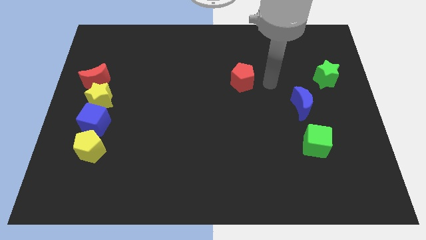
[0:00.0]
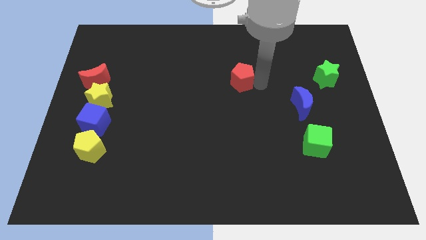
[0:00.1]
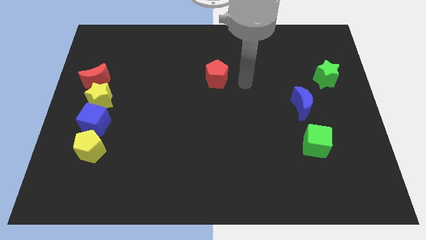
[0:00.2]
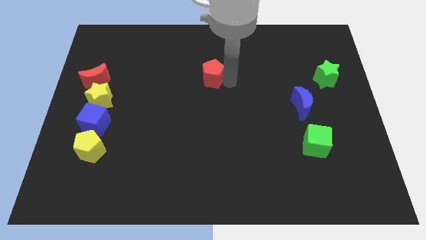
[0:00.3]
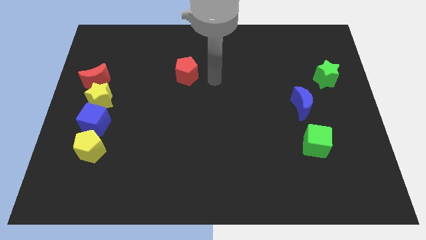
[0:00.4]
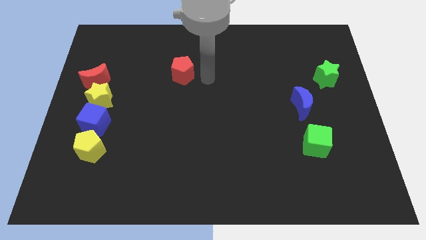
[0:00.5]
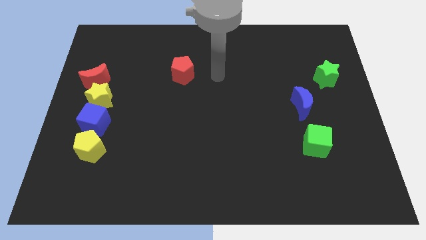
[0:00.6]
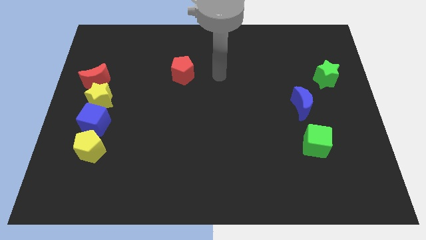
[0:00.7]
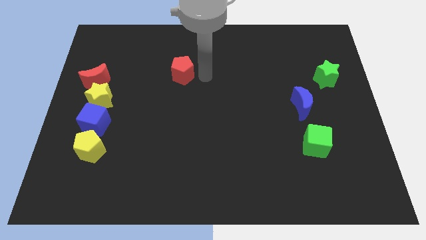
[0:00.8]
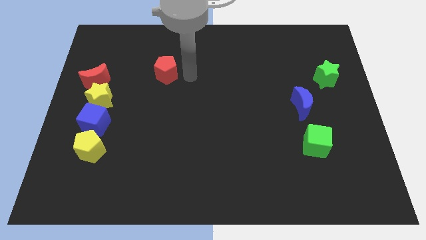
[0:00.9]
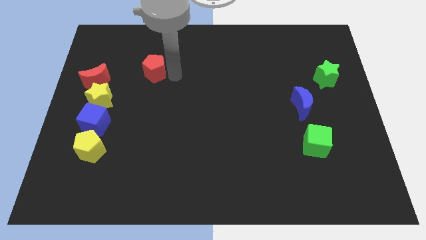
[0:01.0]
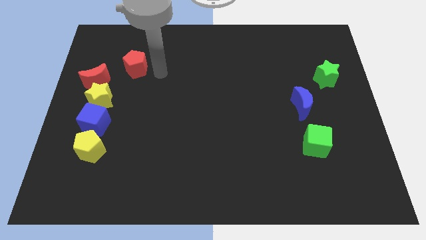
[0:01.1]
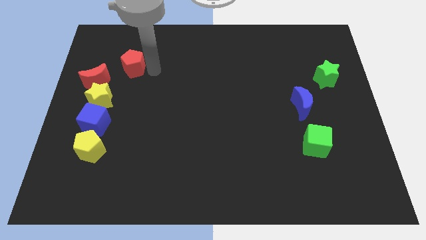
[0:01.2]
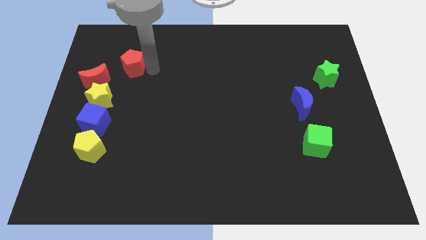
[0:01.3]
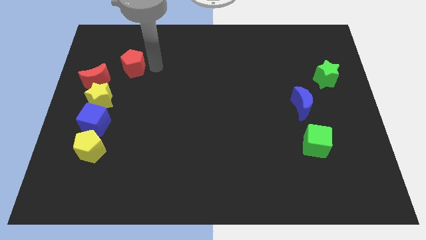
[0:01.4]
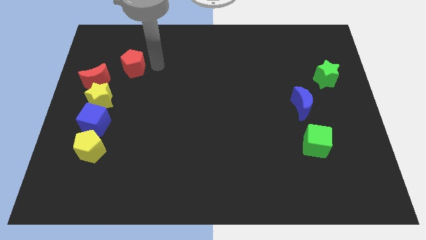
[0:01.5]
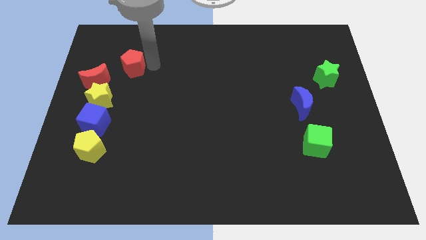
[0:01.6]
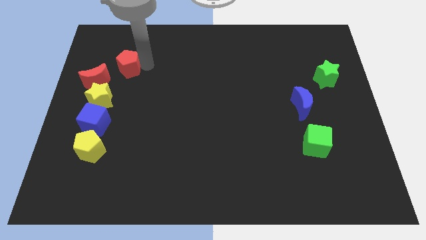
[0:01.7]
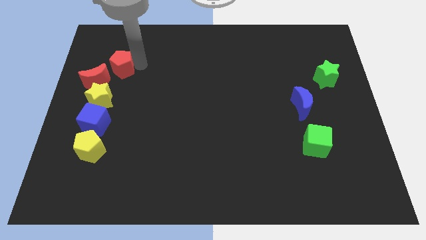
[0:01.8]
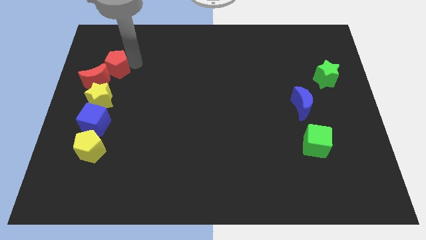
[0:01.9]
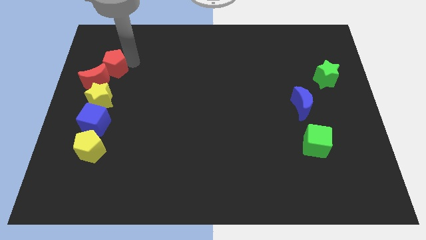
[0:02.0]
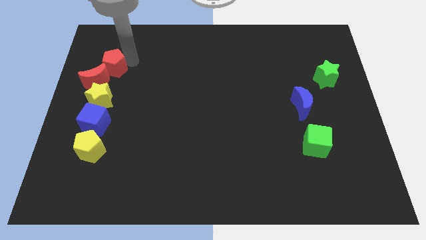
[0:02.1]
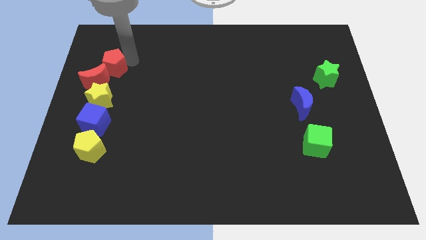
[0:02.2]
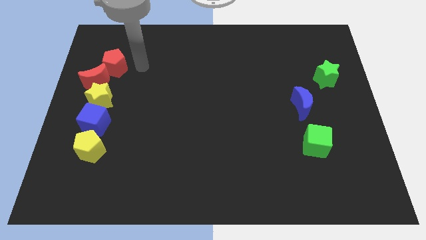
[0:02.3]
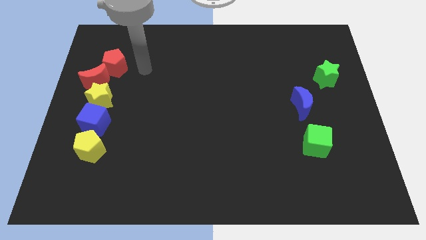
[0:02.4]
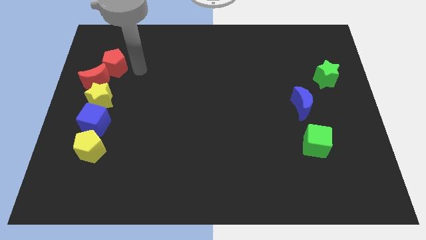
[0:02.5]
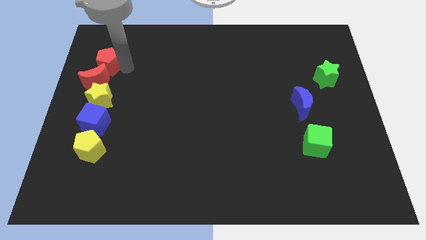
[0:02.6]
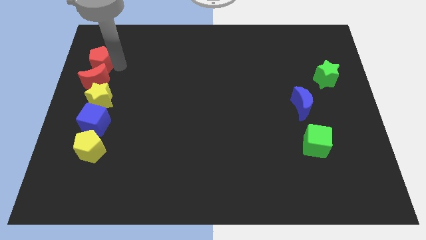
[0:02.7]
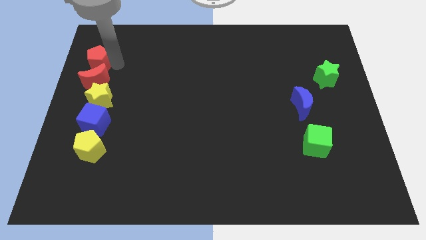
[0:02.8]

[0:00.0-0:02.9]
push the red pentagon above the red moon

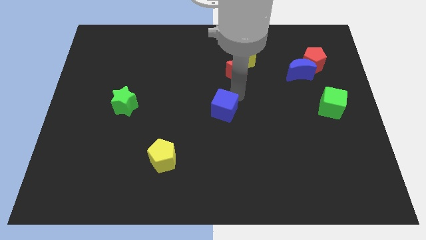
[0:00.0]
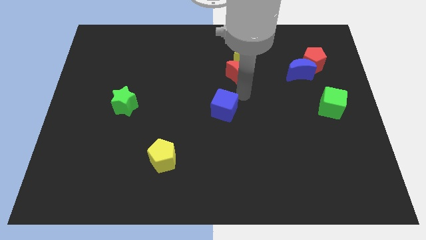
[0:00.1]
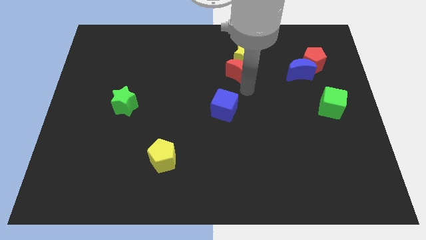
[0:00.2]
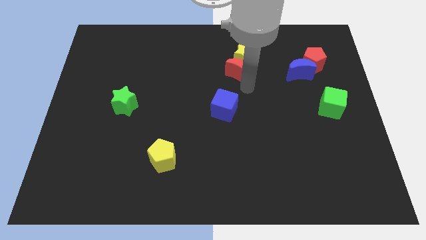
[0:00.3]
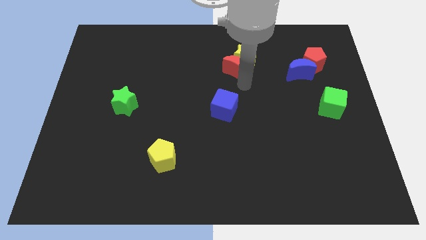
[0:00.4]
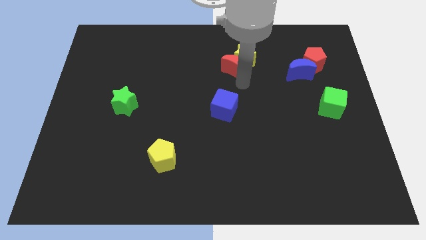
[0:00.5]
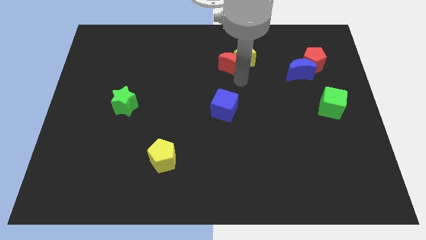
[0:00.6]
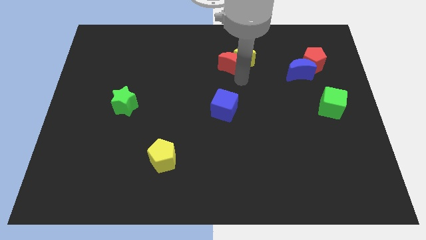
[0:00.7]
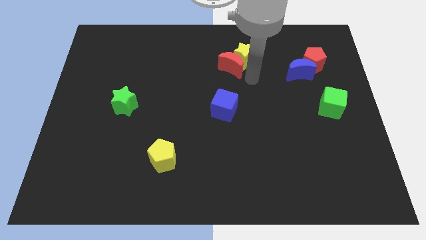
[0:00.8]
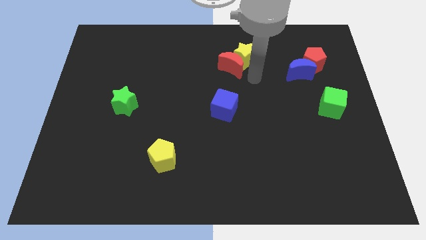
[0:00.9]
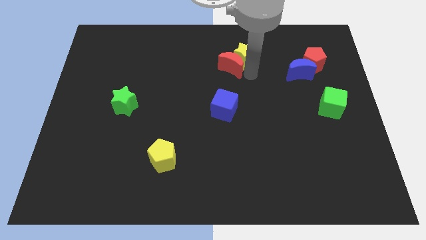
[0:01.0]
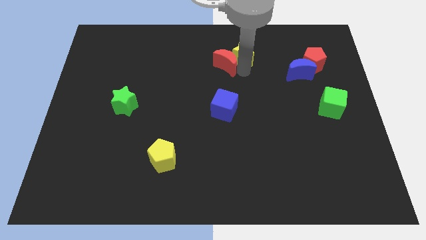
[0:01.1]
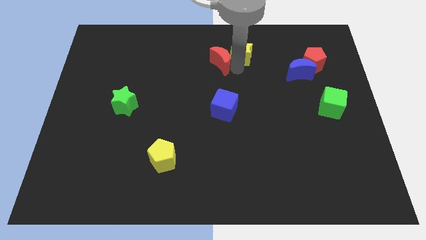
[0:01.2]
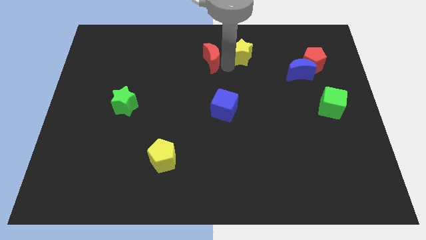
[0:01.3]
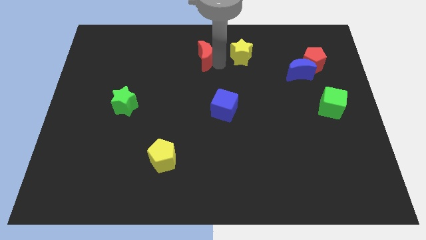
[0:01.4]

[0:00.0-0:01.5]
drag the red crescent to the left side of the yellow star

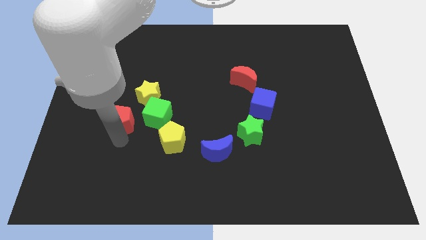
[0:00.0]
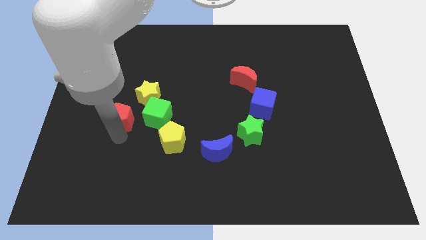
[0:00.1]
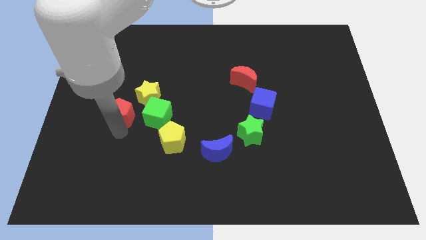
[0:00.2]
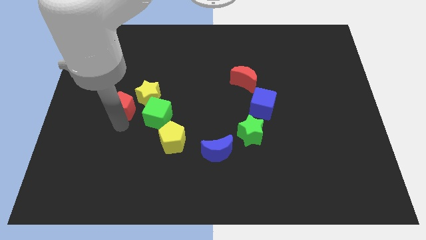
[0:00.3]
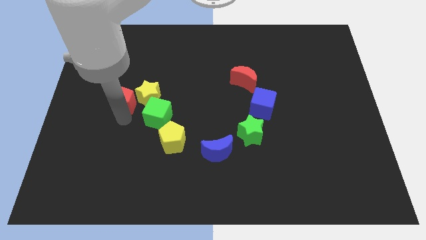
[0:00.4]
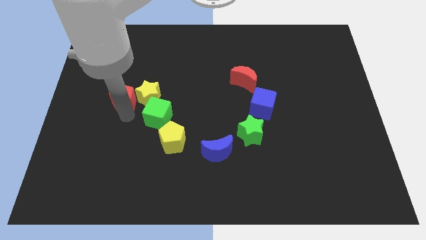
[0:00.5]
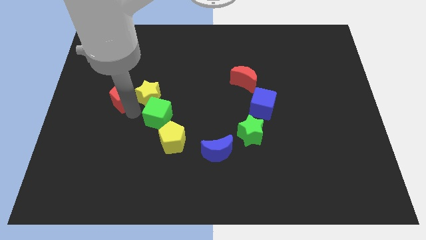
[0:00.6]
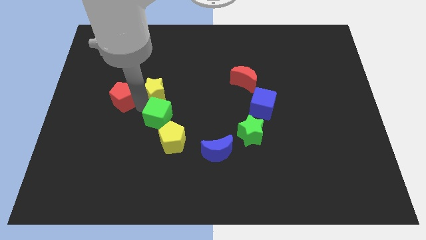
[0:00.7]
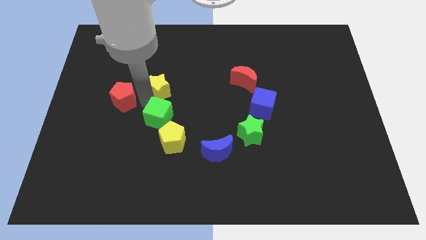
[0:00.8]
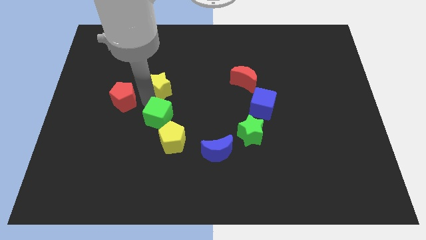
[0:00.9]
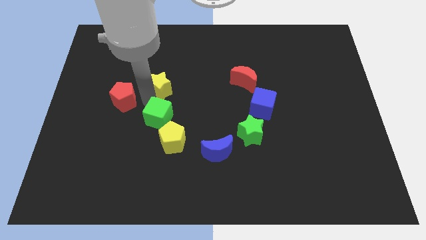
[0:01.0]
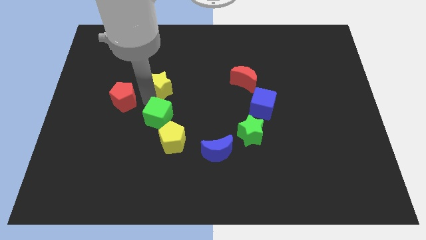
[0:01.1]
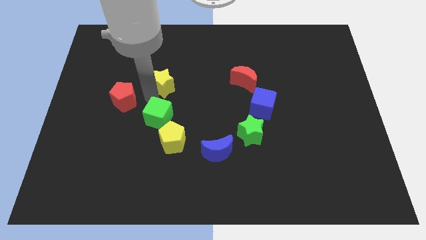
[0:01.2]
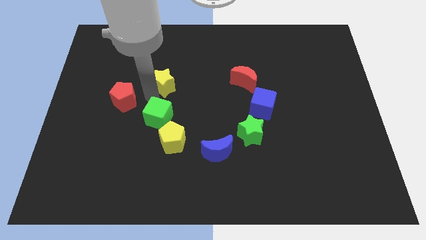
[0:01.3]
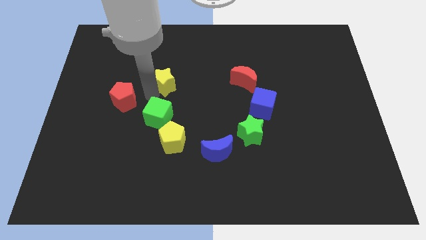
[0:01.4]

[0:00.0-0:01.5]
slightly push the yellow star away from green cube

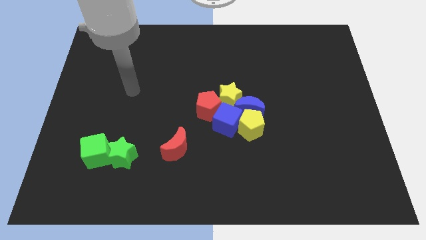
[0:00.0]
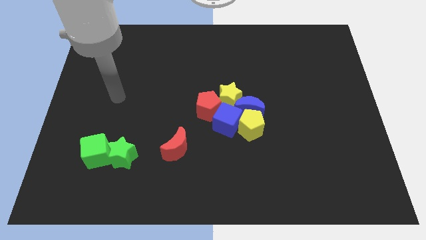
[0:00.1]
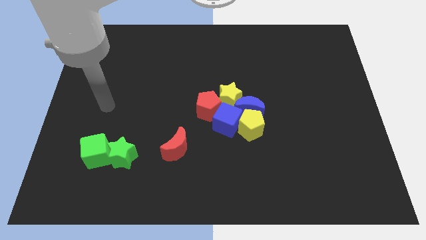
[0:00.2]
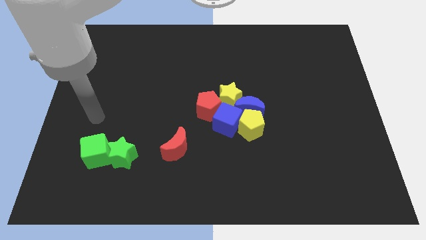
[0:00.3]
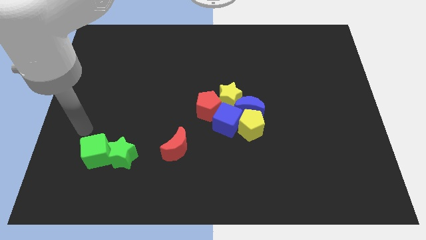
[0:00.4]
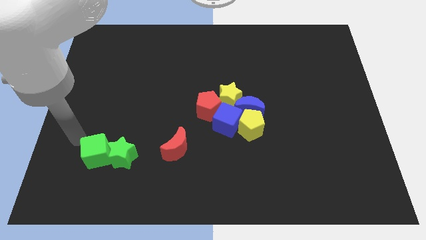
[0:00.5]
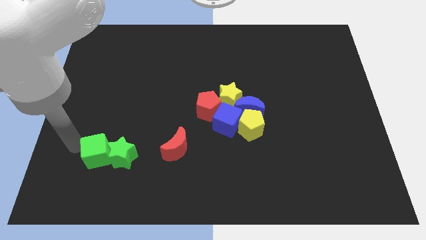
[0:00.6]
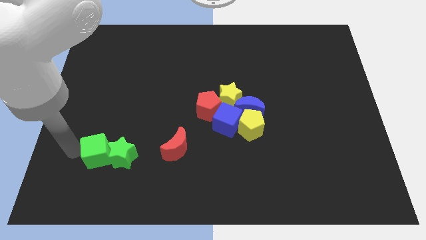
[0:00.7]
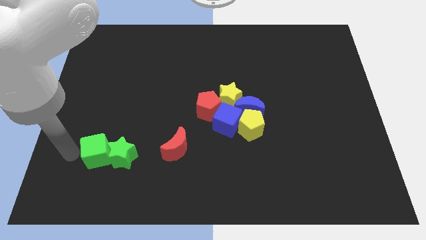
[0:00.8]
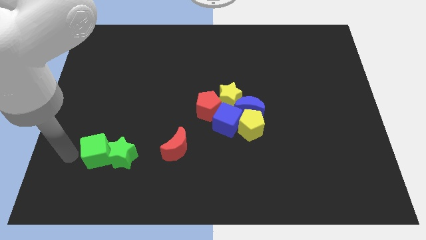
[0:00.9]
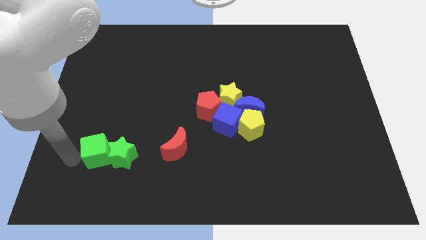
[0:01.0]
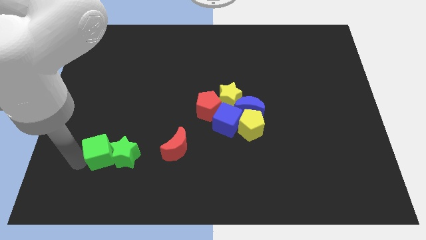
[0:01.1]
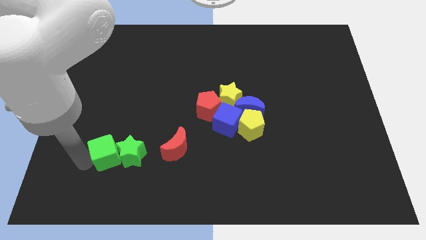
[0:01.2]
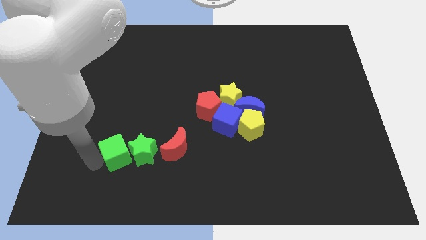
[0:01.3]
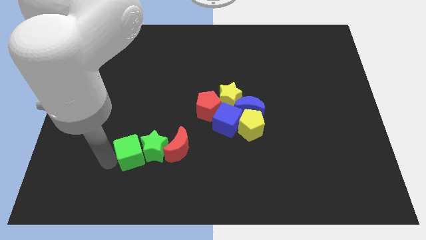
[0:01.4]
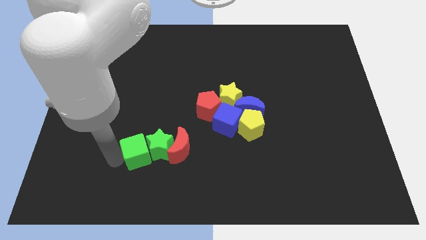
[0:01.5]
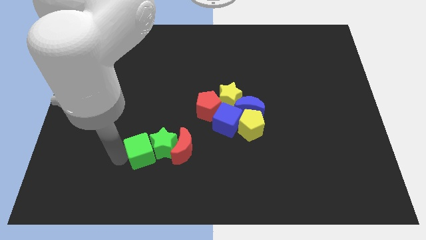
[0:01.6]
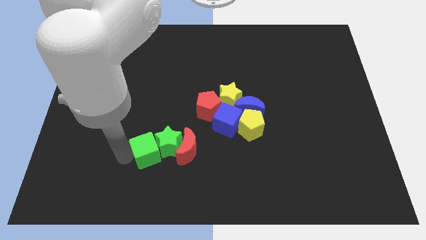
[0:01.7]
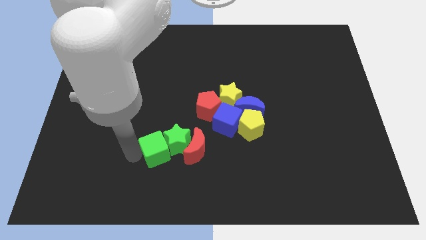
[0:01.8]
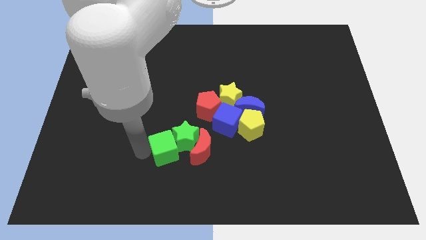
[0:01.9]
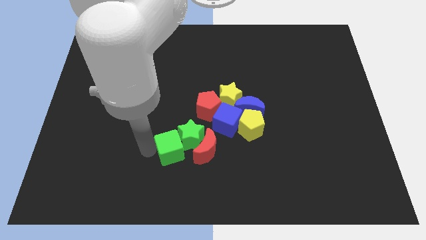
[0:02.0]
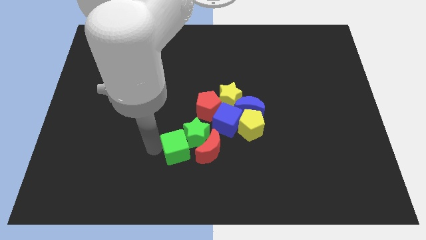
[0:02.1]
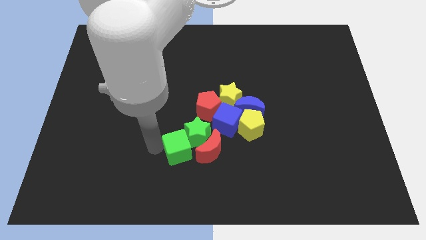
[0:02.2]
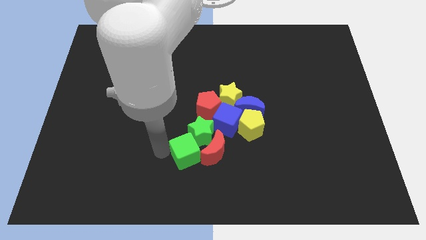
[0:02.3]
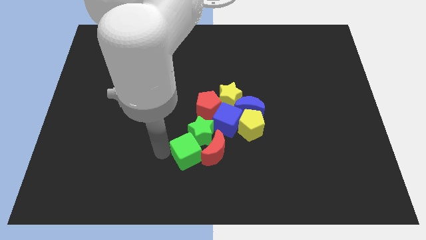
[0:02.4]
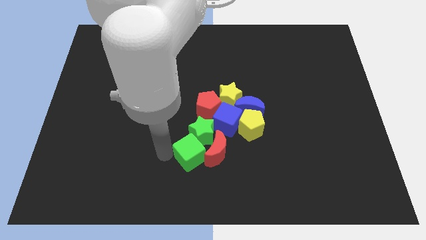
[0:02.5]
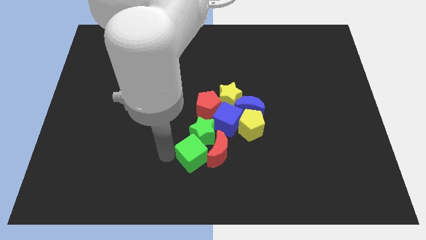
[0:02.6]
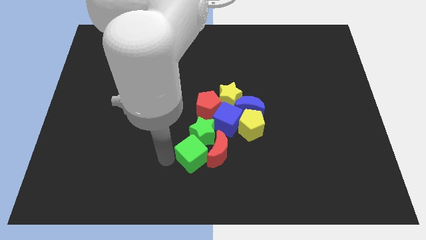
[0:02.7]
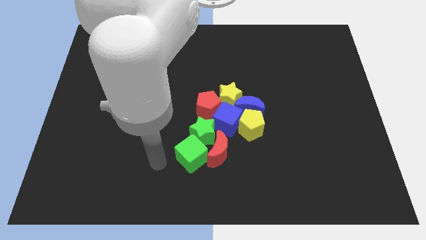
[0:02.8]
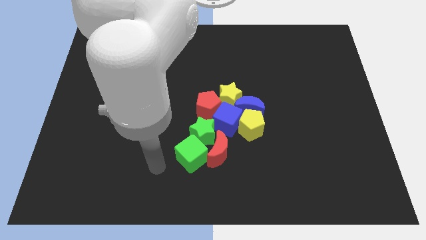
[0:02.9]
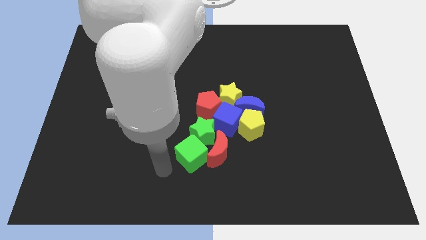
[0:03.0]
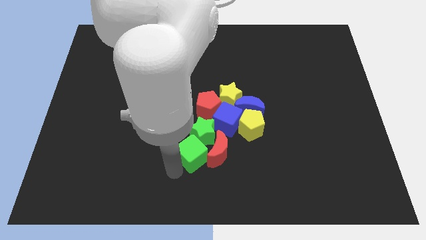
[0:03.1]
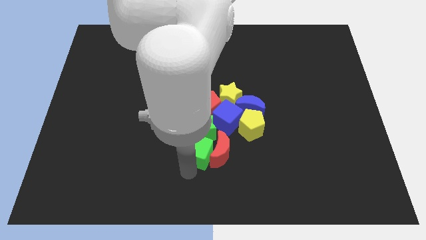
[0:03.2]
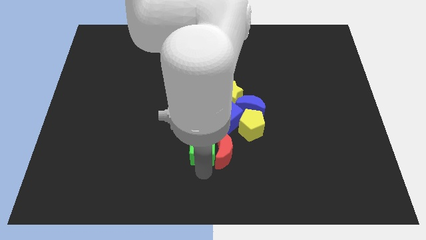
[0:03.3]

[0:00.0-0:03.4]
move the green cube along with green star to the group of blocks
